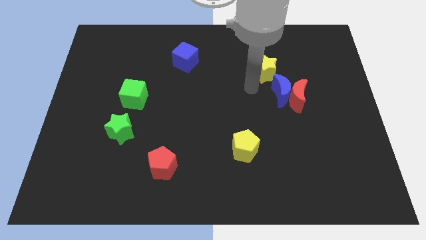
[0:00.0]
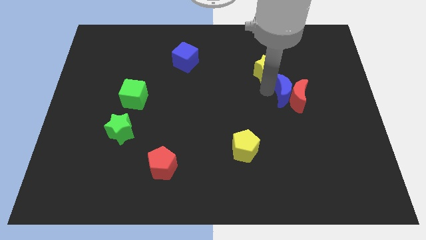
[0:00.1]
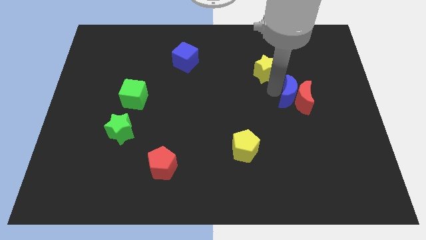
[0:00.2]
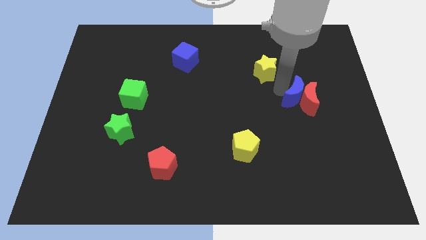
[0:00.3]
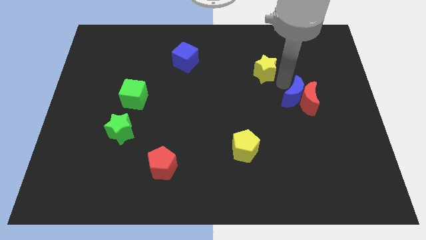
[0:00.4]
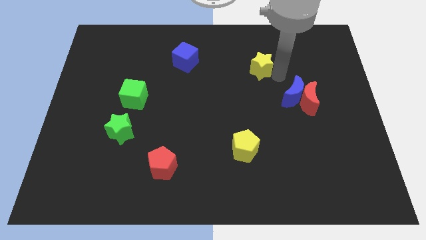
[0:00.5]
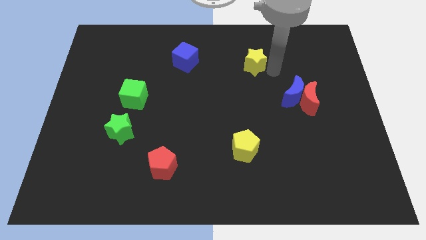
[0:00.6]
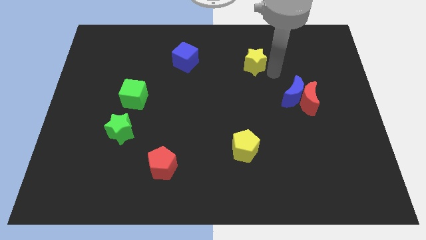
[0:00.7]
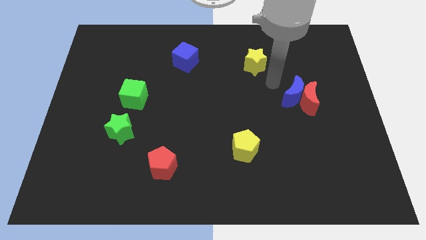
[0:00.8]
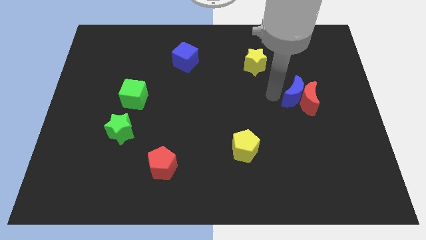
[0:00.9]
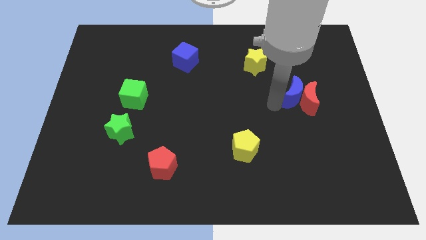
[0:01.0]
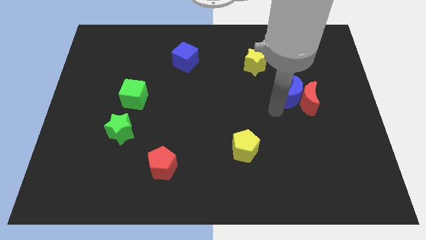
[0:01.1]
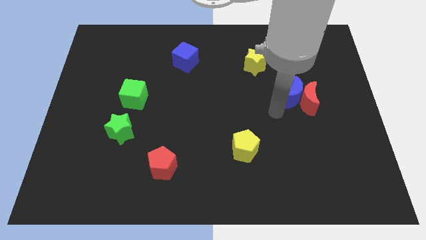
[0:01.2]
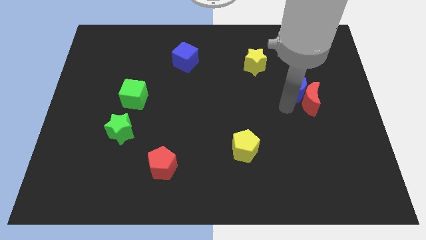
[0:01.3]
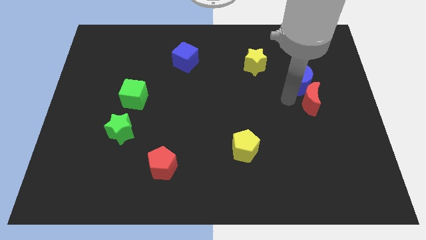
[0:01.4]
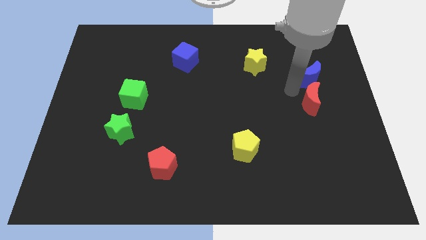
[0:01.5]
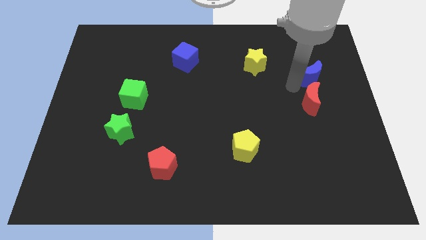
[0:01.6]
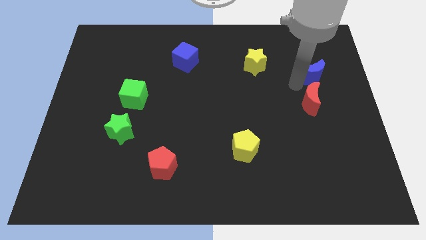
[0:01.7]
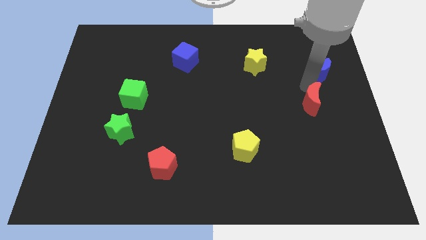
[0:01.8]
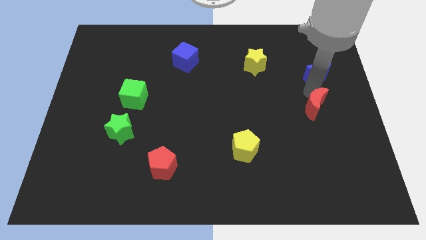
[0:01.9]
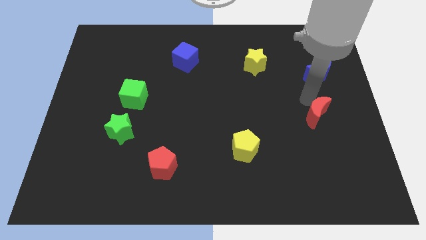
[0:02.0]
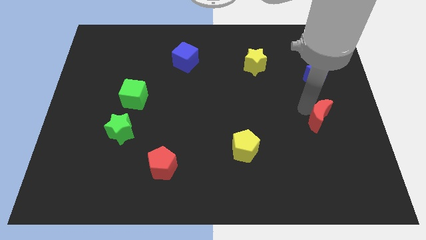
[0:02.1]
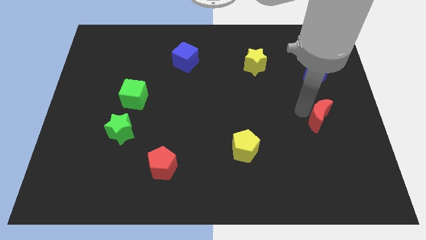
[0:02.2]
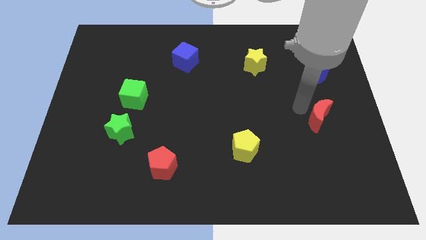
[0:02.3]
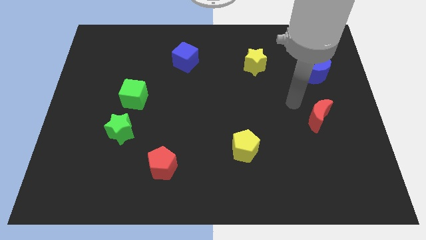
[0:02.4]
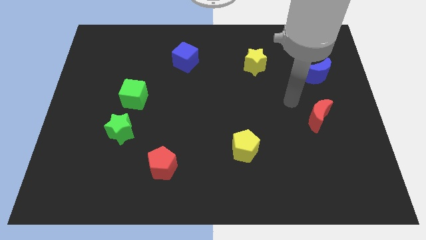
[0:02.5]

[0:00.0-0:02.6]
move the red moon away from the blue moon

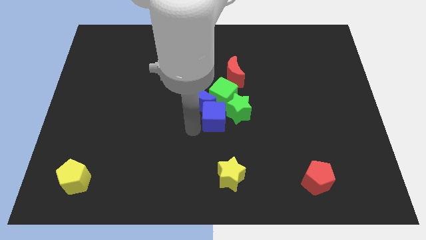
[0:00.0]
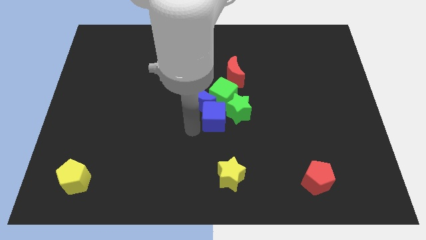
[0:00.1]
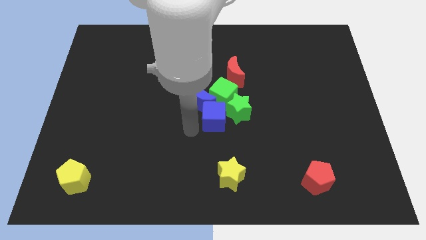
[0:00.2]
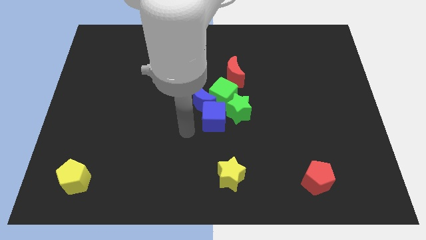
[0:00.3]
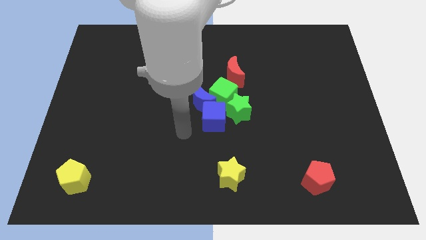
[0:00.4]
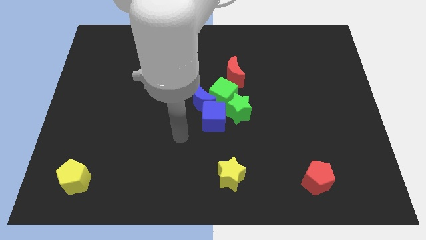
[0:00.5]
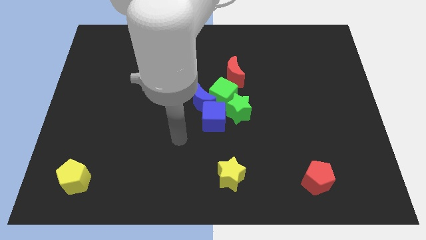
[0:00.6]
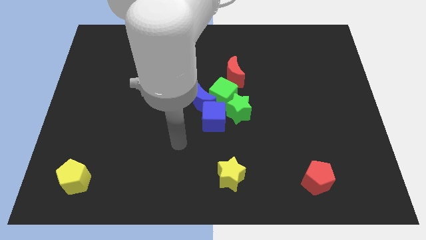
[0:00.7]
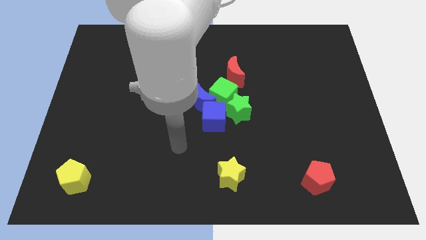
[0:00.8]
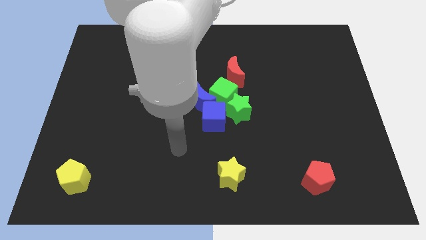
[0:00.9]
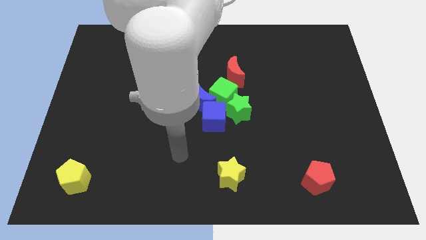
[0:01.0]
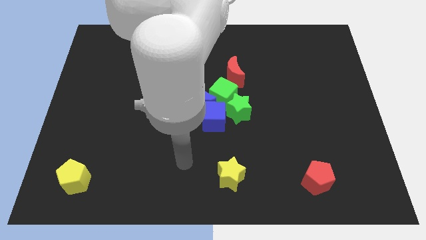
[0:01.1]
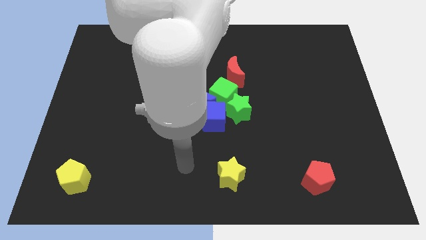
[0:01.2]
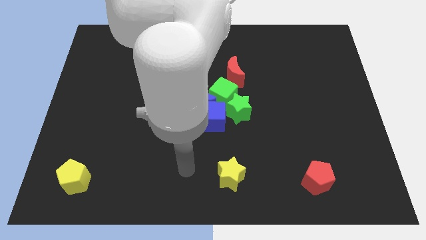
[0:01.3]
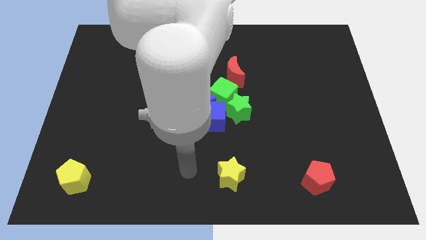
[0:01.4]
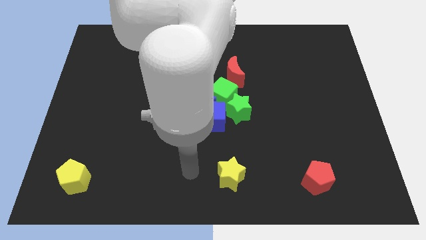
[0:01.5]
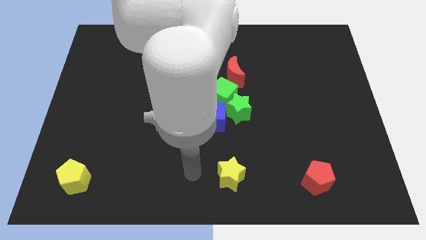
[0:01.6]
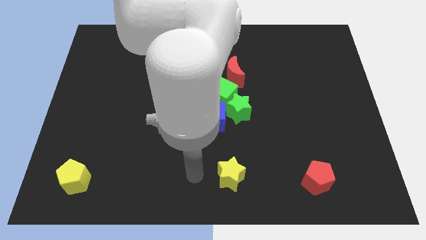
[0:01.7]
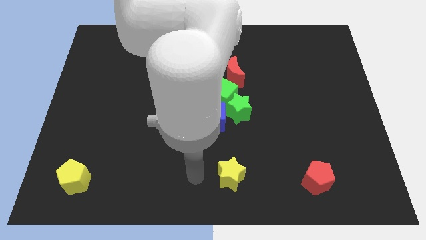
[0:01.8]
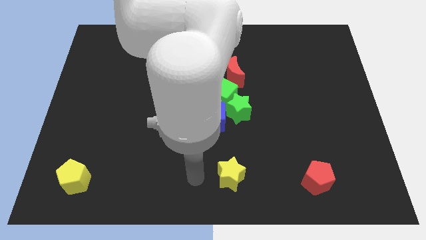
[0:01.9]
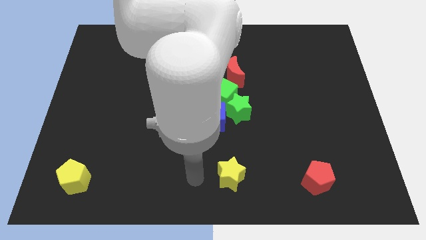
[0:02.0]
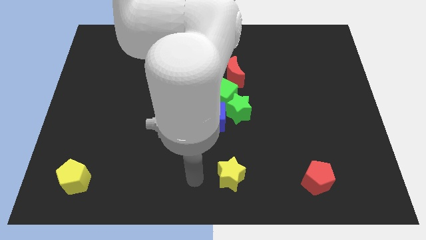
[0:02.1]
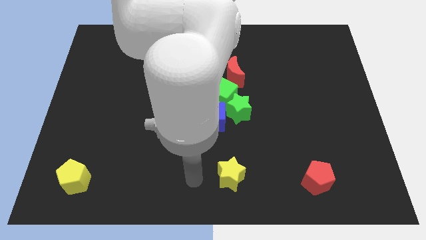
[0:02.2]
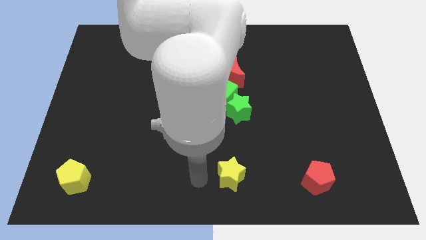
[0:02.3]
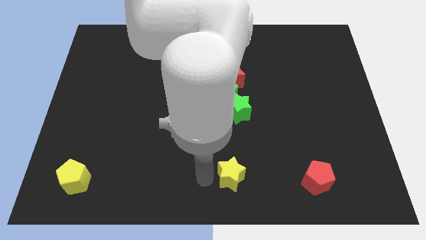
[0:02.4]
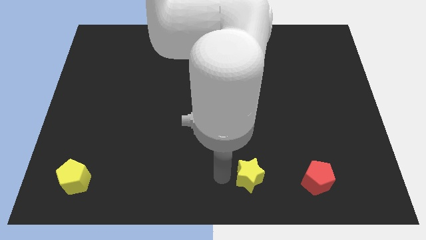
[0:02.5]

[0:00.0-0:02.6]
move your arm left to the yellow star

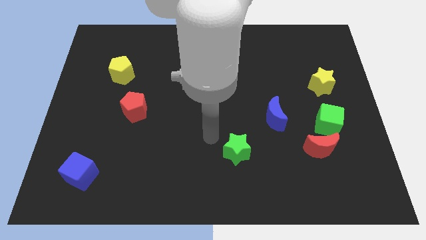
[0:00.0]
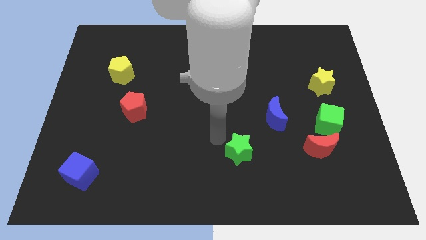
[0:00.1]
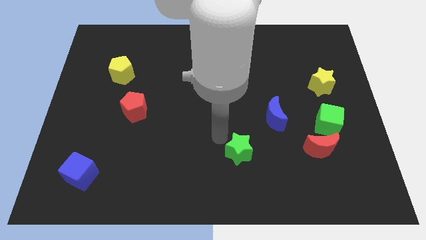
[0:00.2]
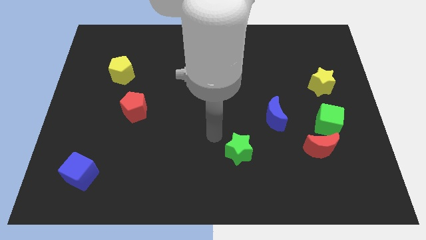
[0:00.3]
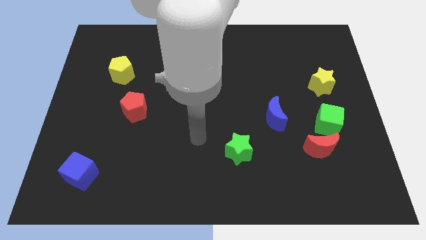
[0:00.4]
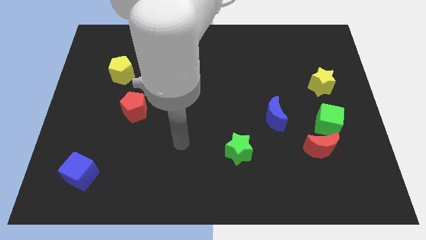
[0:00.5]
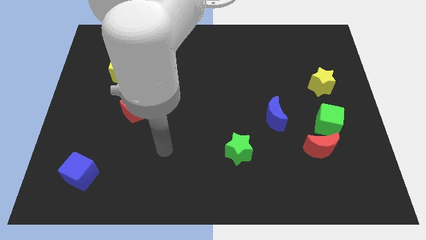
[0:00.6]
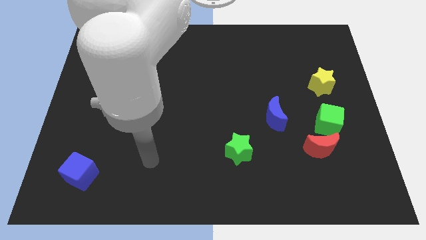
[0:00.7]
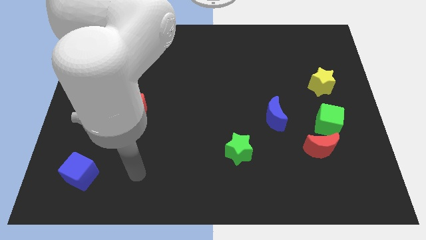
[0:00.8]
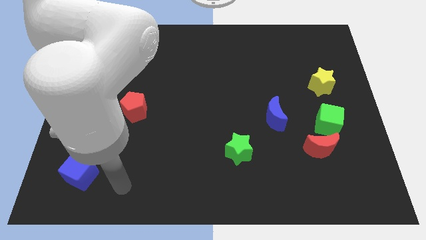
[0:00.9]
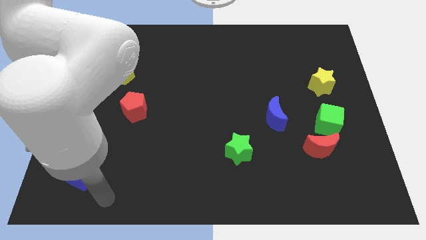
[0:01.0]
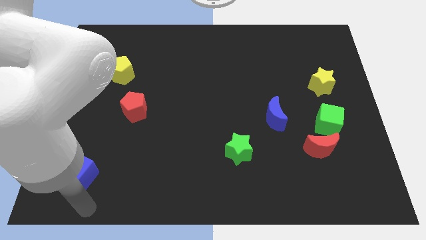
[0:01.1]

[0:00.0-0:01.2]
put the green star at the bottom left side of the blue crescent

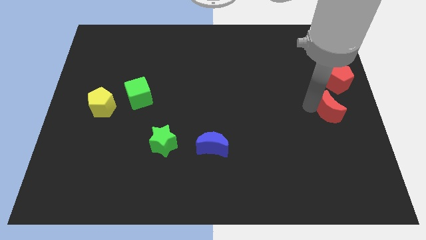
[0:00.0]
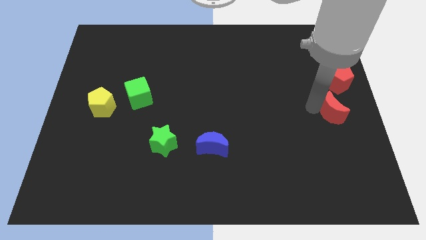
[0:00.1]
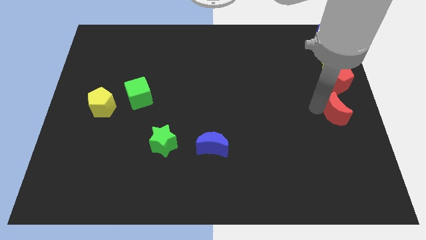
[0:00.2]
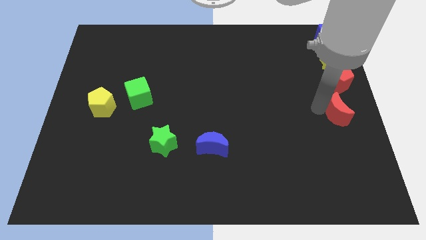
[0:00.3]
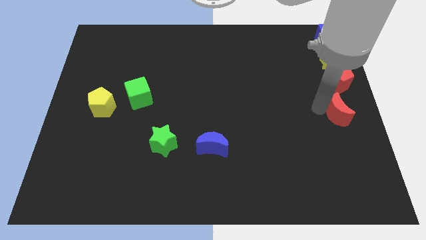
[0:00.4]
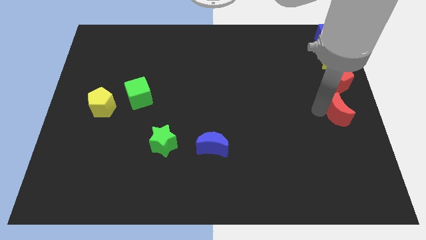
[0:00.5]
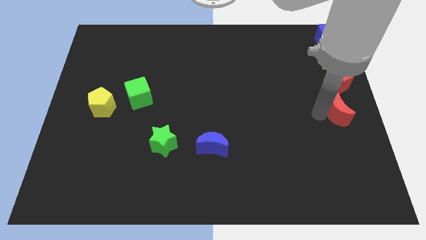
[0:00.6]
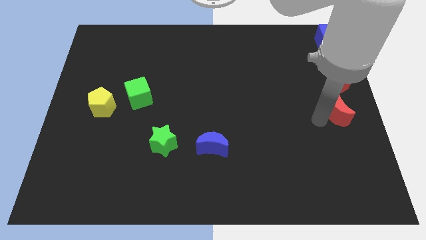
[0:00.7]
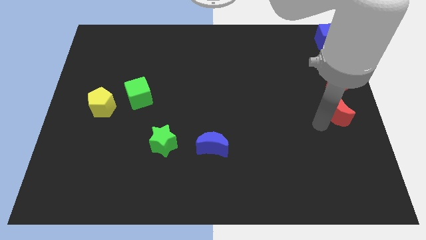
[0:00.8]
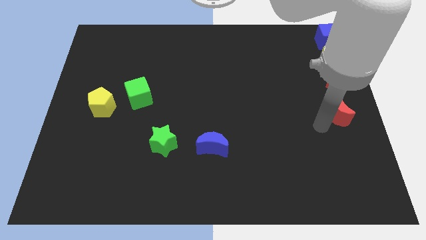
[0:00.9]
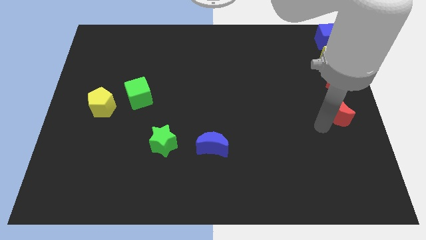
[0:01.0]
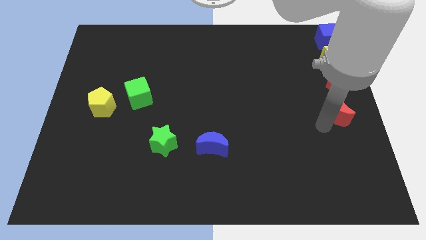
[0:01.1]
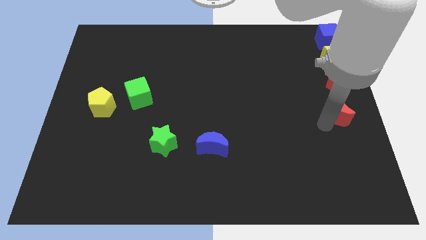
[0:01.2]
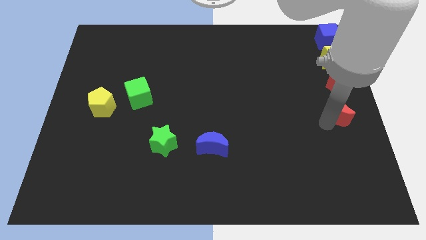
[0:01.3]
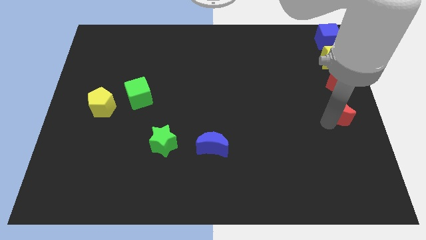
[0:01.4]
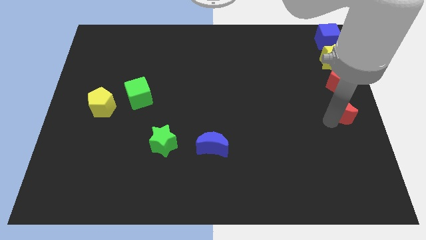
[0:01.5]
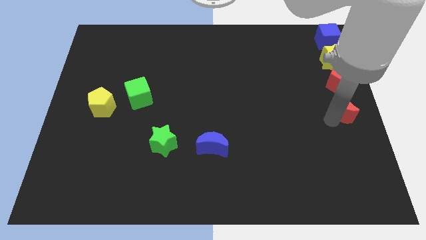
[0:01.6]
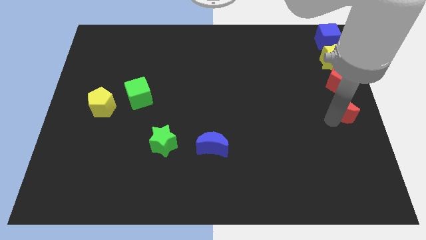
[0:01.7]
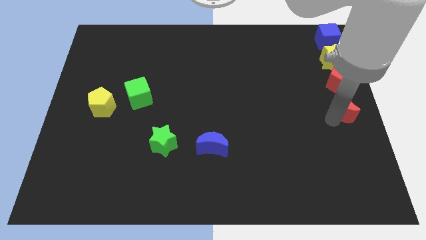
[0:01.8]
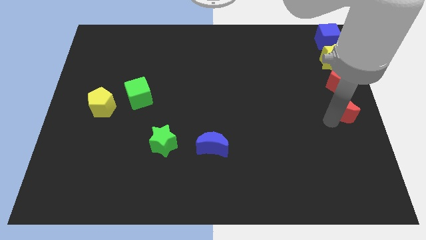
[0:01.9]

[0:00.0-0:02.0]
push the red crescent to the bottom of red pentagon

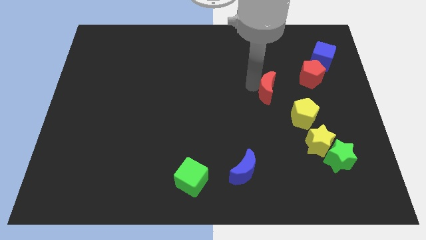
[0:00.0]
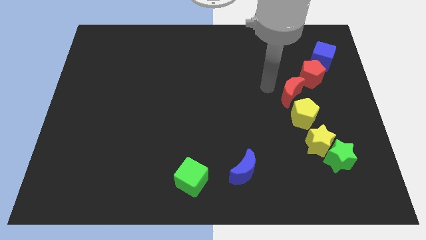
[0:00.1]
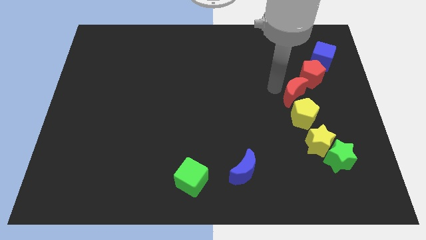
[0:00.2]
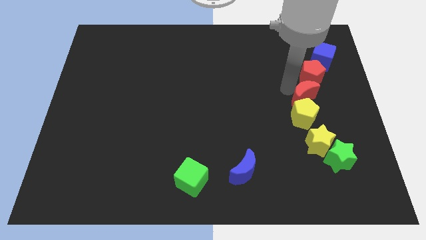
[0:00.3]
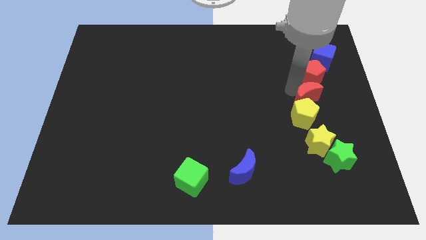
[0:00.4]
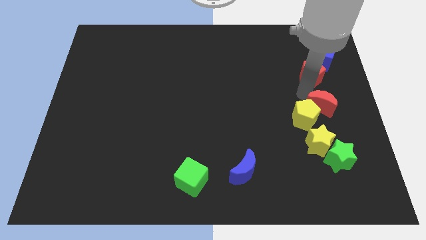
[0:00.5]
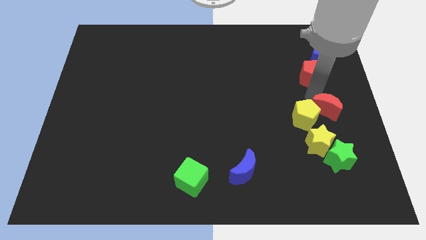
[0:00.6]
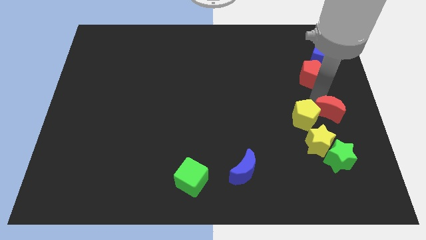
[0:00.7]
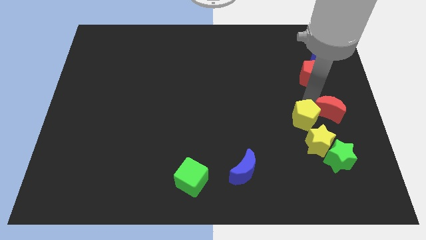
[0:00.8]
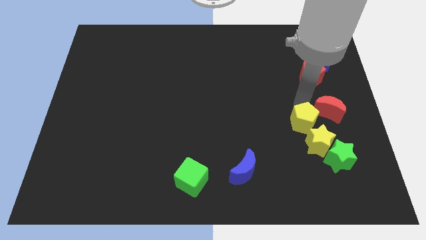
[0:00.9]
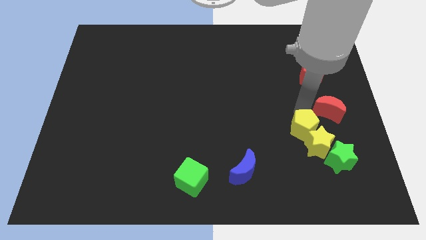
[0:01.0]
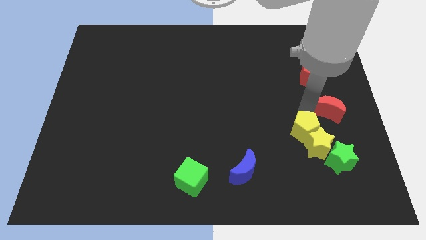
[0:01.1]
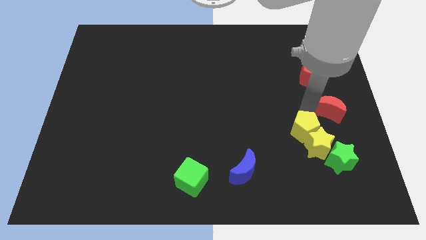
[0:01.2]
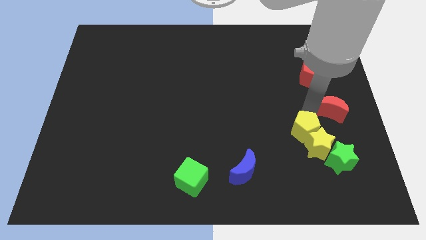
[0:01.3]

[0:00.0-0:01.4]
place the red moon diagonal to the yellow pentagon
